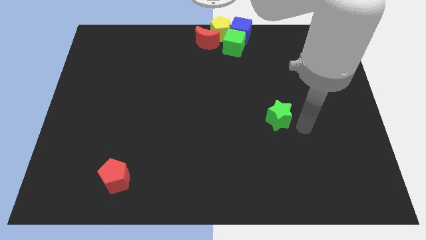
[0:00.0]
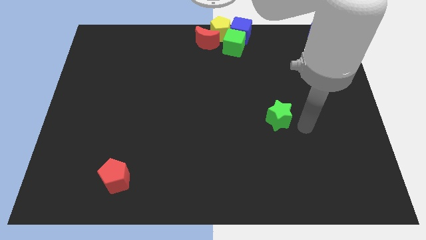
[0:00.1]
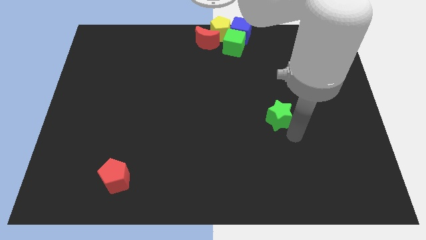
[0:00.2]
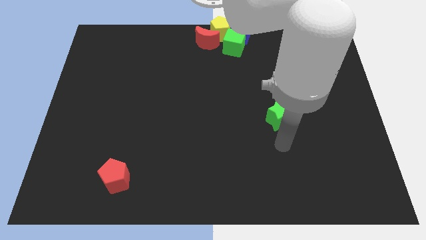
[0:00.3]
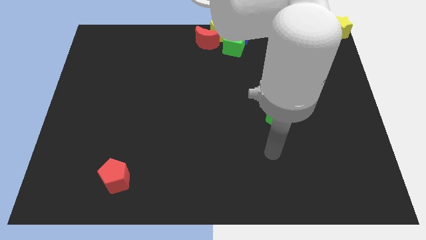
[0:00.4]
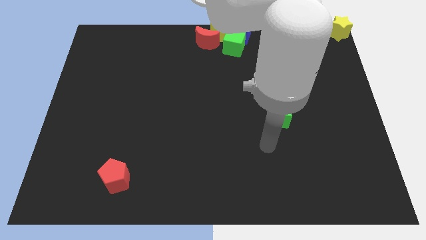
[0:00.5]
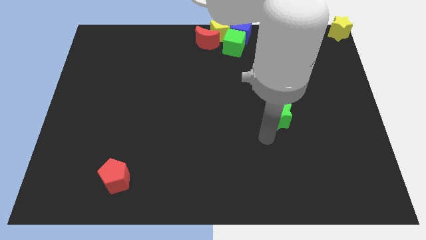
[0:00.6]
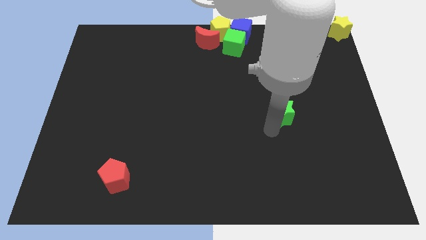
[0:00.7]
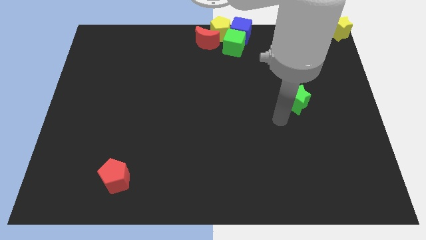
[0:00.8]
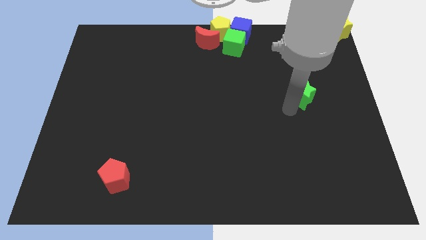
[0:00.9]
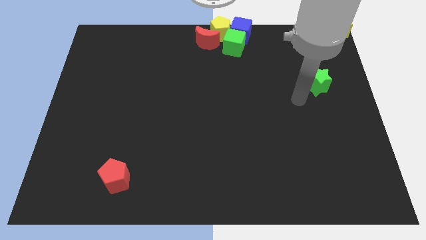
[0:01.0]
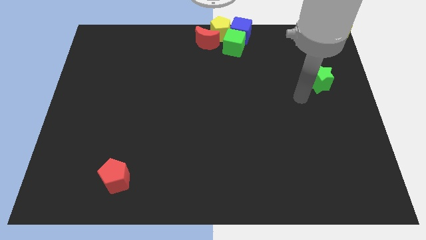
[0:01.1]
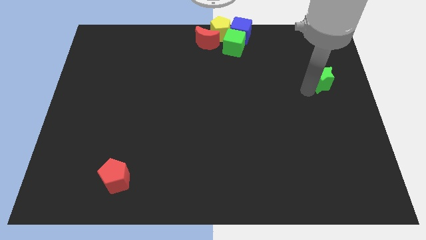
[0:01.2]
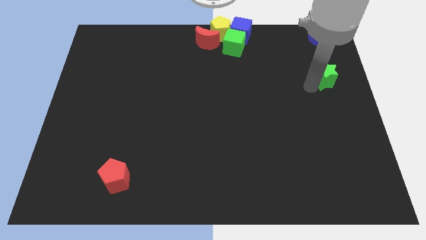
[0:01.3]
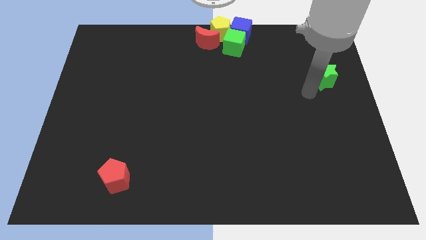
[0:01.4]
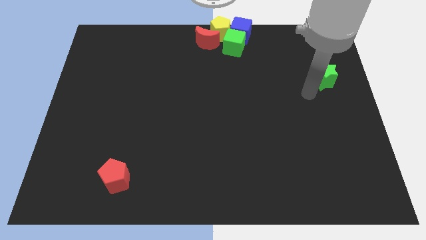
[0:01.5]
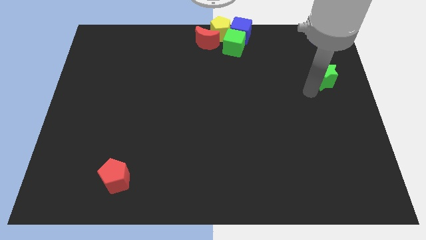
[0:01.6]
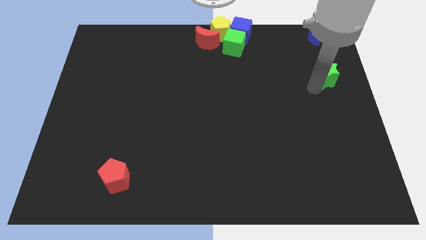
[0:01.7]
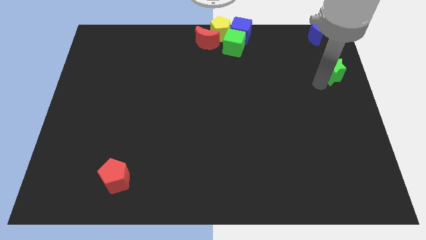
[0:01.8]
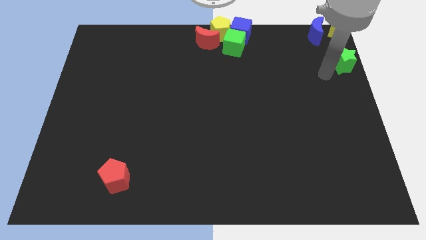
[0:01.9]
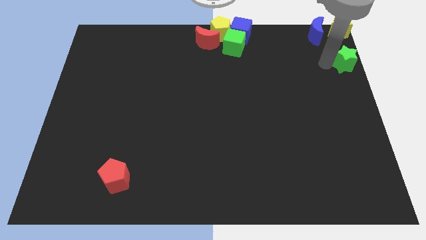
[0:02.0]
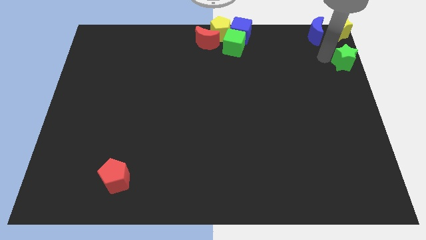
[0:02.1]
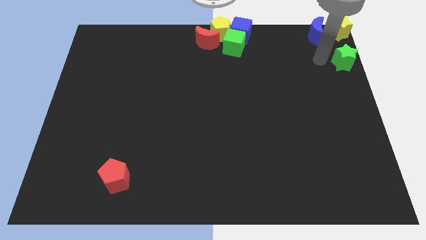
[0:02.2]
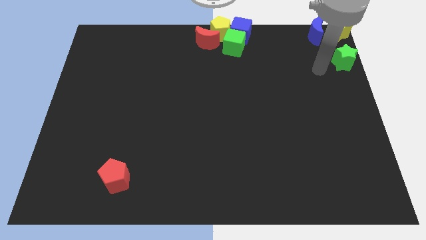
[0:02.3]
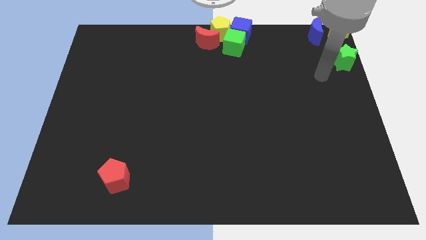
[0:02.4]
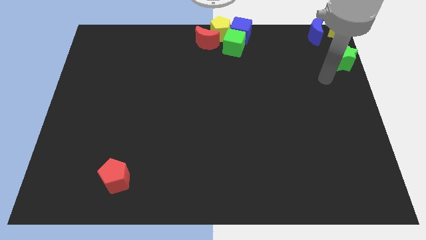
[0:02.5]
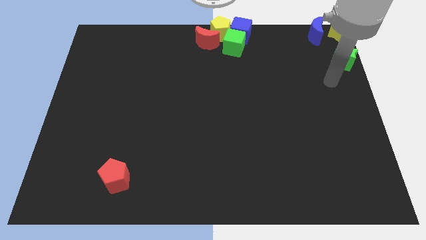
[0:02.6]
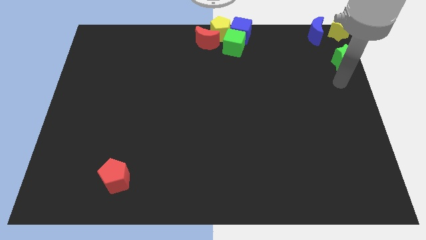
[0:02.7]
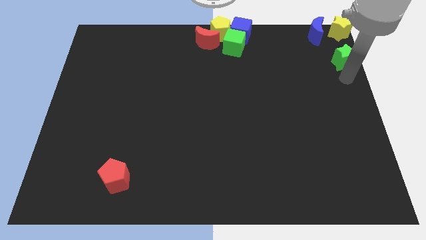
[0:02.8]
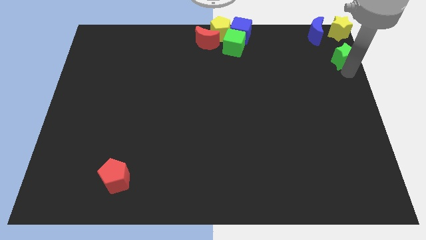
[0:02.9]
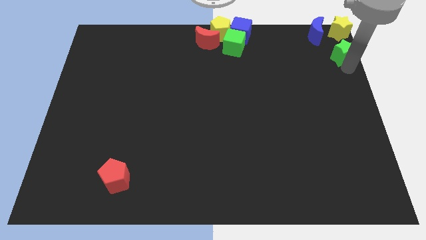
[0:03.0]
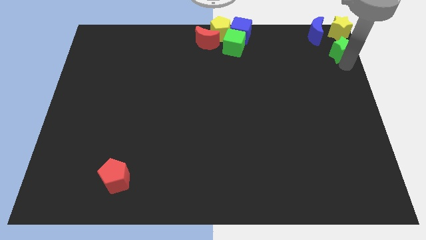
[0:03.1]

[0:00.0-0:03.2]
move the green star vertically below the yellow star

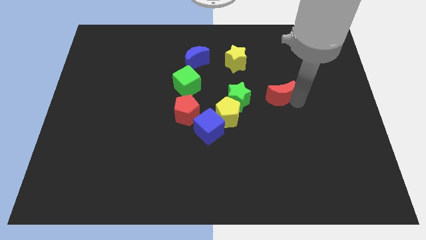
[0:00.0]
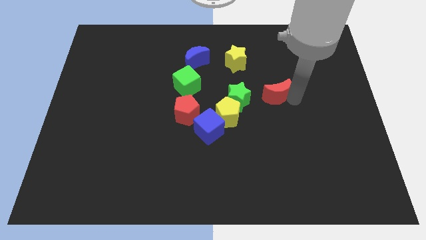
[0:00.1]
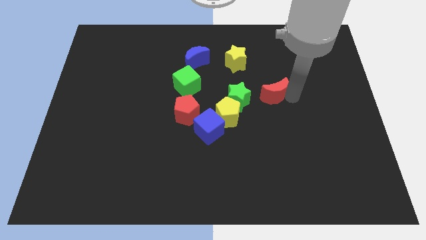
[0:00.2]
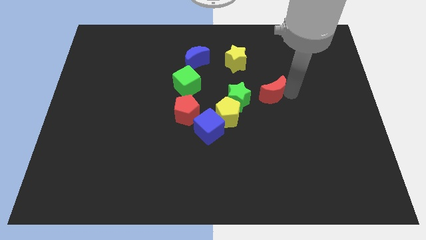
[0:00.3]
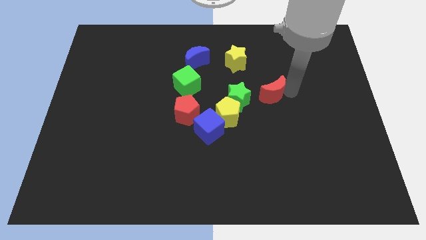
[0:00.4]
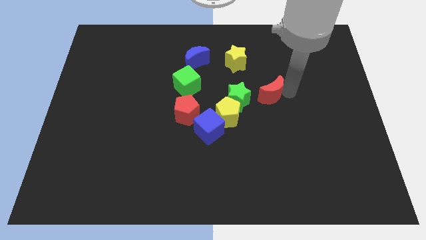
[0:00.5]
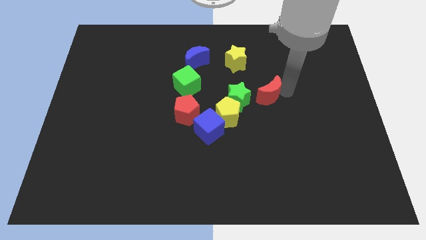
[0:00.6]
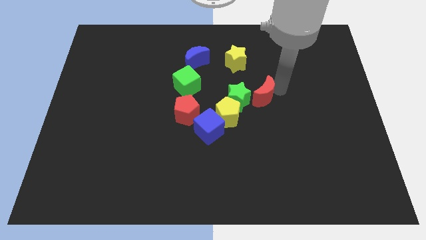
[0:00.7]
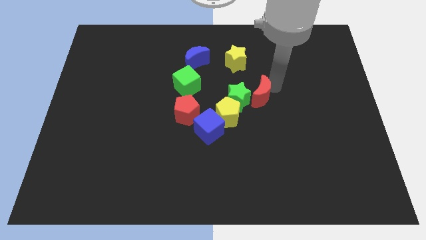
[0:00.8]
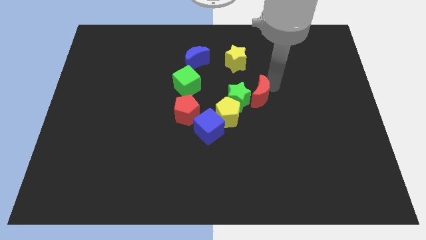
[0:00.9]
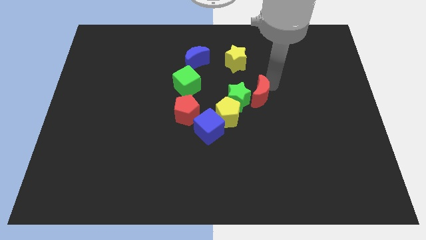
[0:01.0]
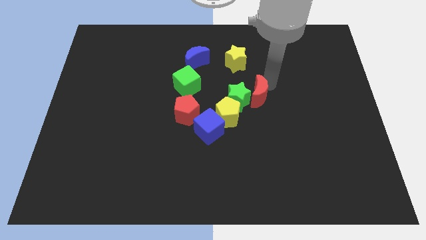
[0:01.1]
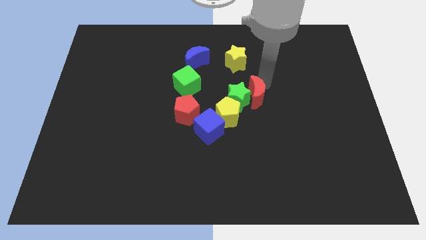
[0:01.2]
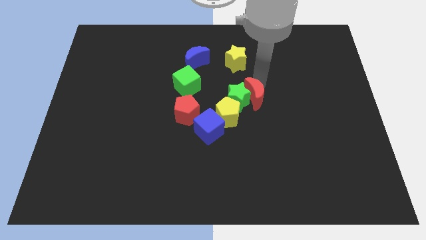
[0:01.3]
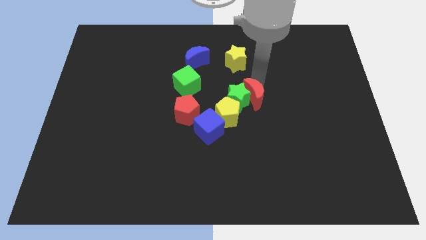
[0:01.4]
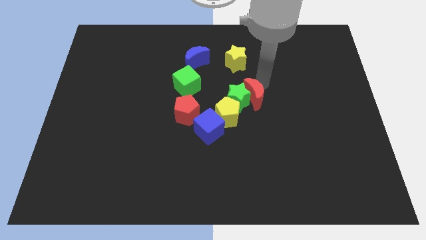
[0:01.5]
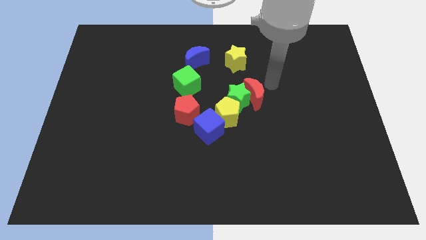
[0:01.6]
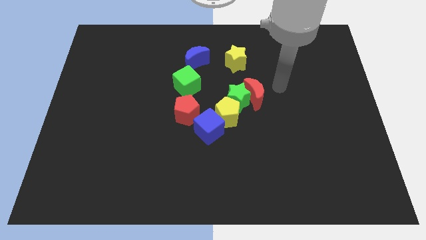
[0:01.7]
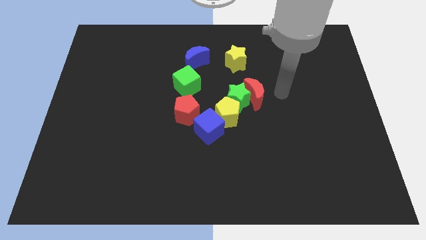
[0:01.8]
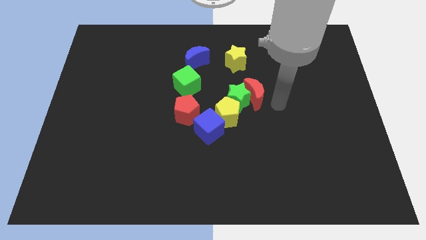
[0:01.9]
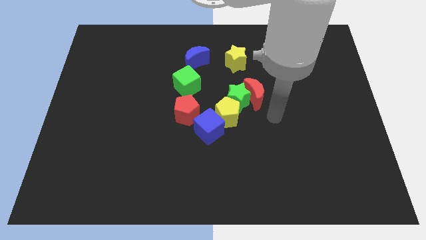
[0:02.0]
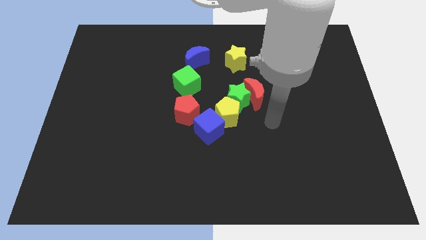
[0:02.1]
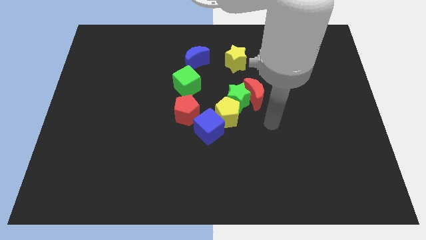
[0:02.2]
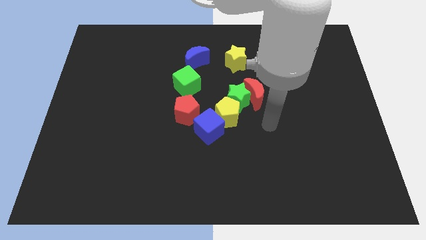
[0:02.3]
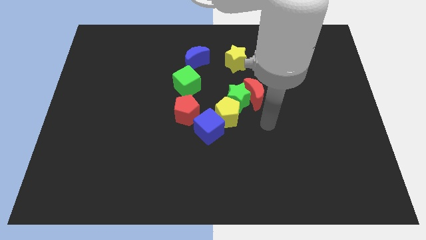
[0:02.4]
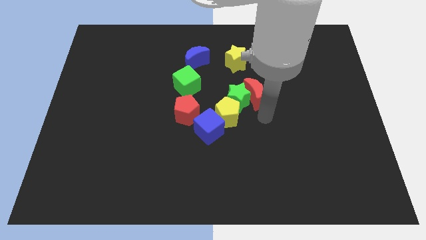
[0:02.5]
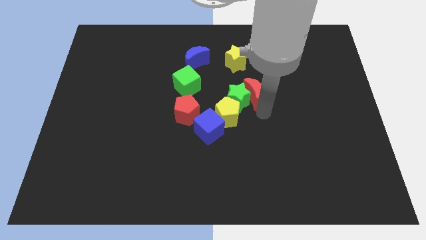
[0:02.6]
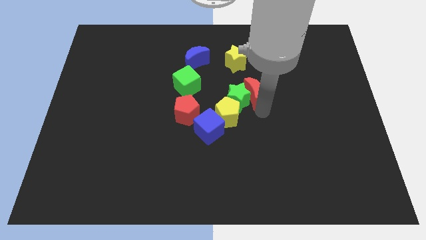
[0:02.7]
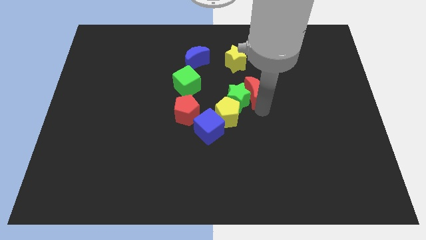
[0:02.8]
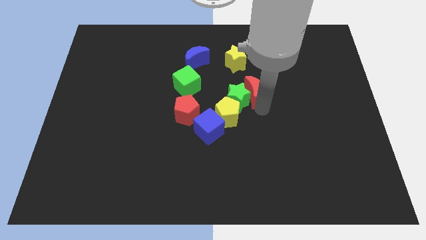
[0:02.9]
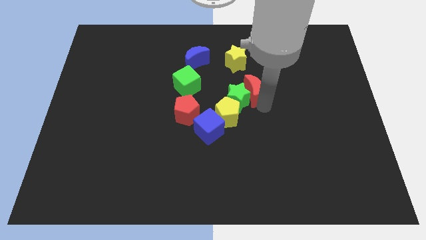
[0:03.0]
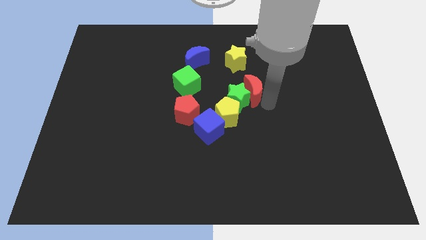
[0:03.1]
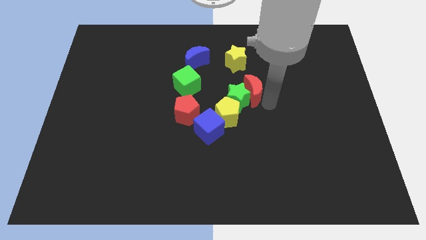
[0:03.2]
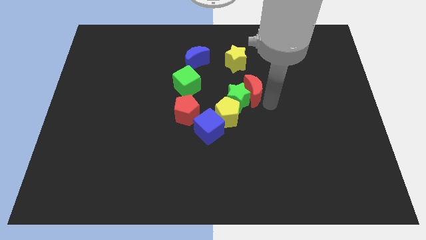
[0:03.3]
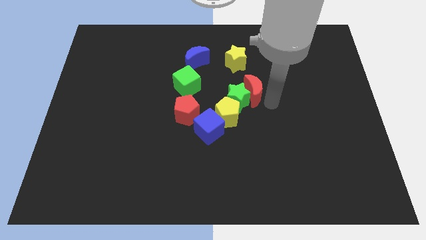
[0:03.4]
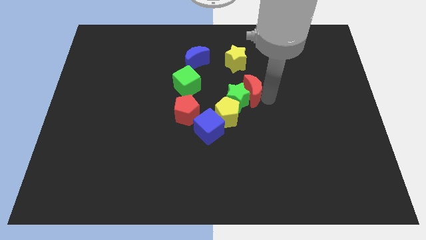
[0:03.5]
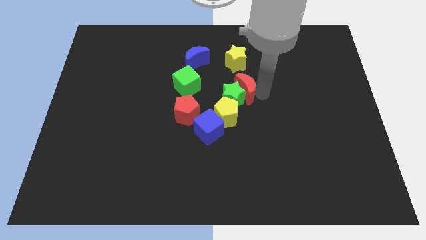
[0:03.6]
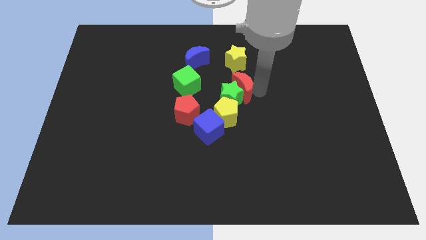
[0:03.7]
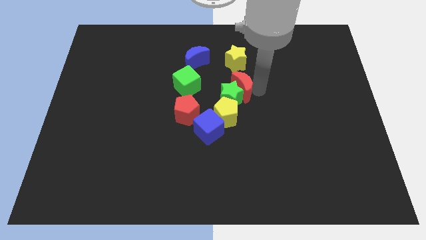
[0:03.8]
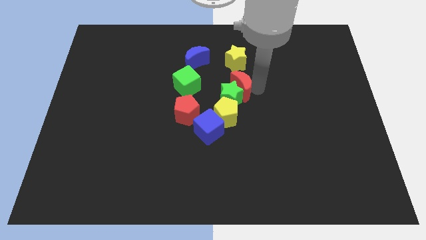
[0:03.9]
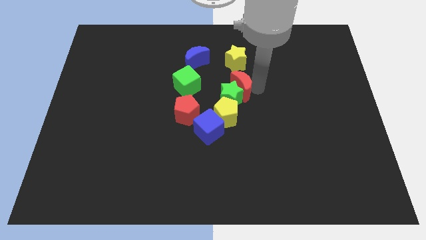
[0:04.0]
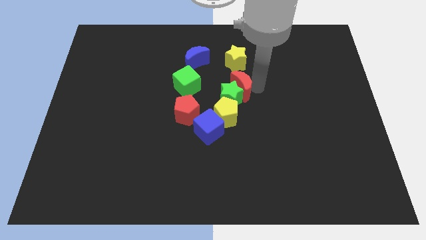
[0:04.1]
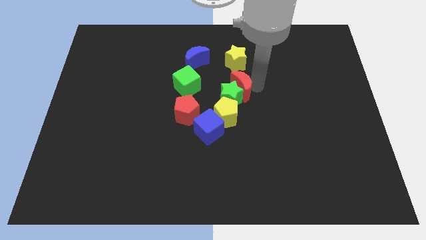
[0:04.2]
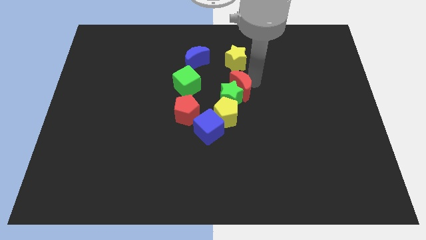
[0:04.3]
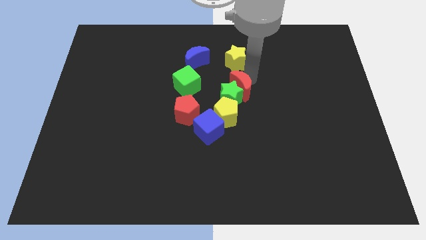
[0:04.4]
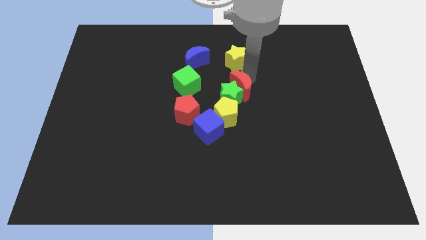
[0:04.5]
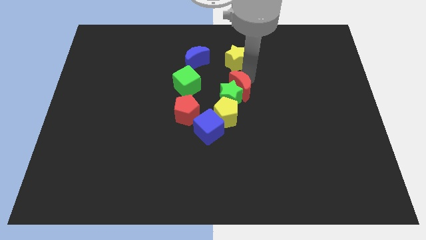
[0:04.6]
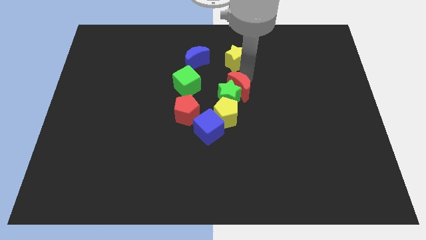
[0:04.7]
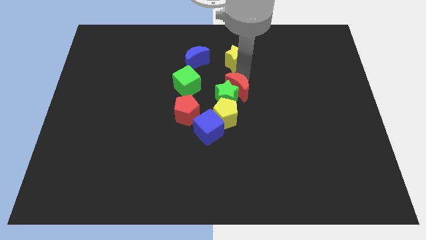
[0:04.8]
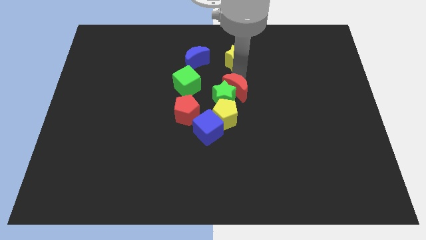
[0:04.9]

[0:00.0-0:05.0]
place the red crescent above the green star

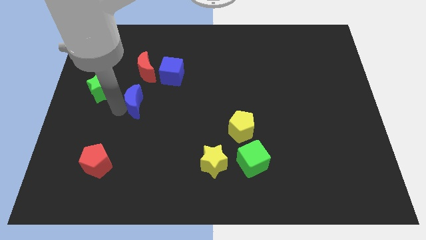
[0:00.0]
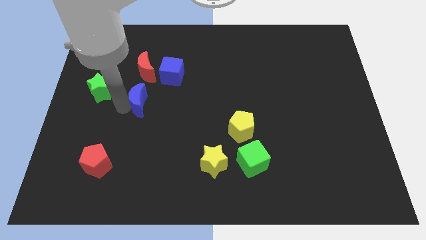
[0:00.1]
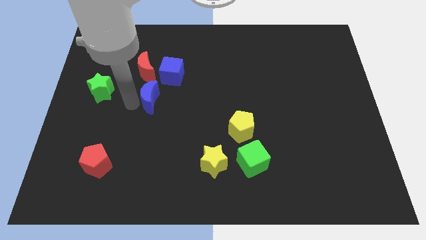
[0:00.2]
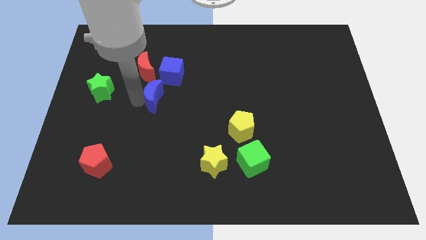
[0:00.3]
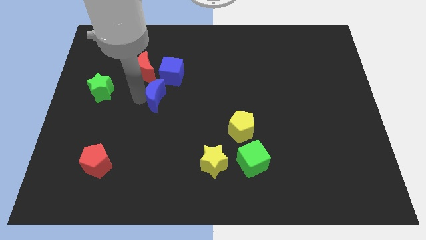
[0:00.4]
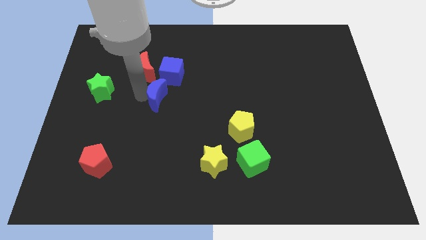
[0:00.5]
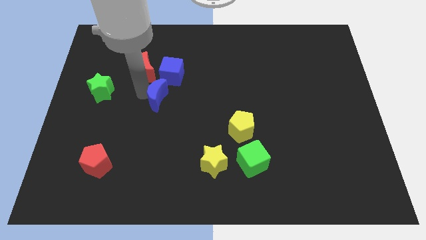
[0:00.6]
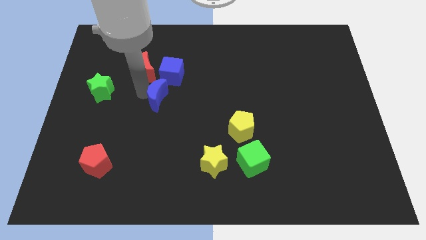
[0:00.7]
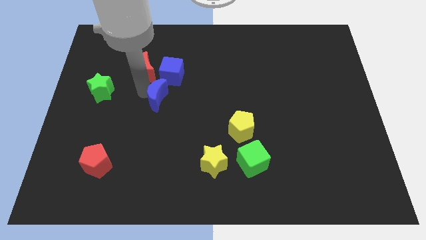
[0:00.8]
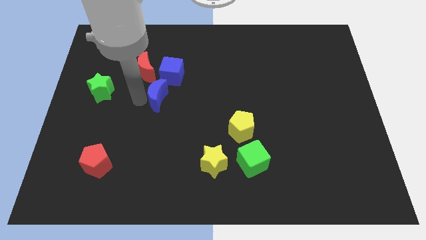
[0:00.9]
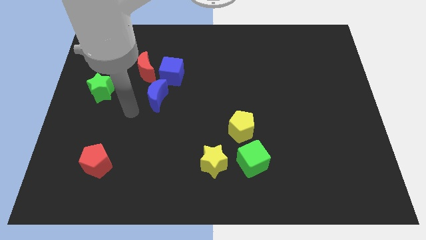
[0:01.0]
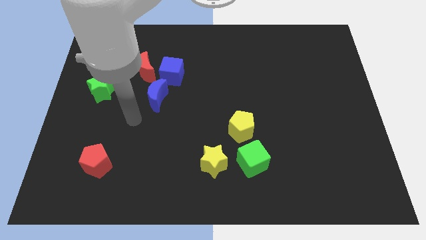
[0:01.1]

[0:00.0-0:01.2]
place the blue crescent towards the blue cube
